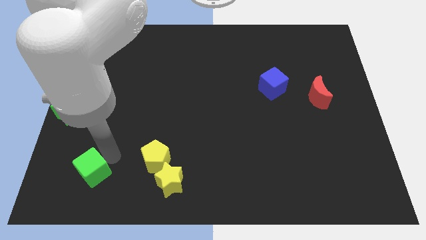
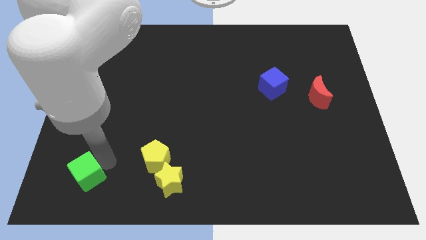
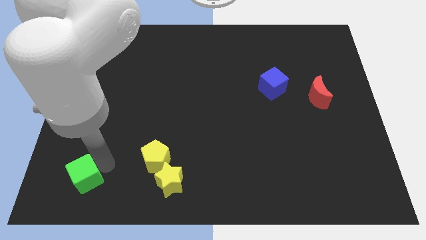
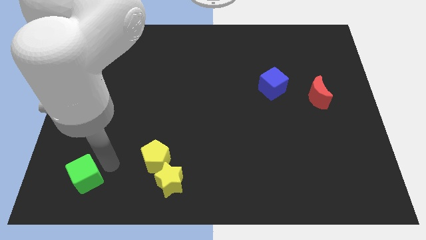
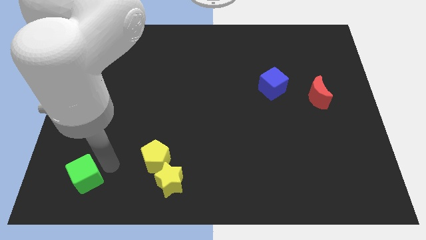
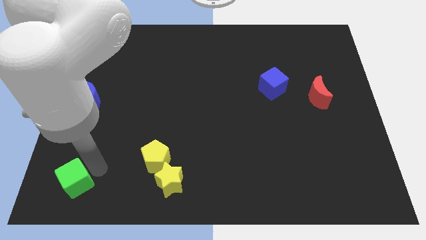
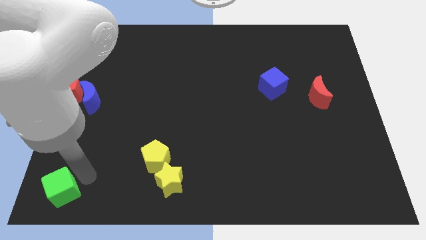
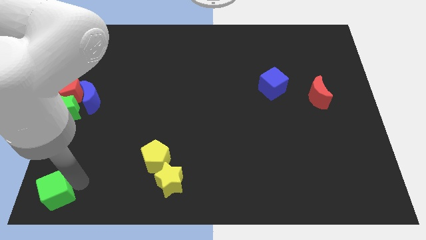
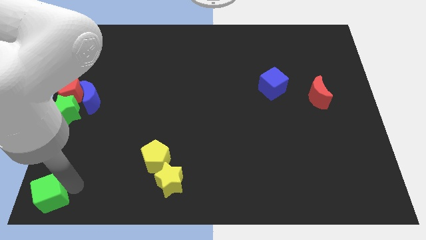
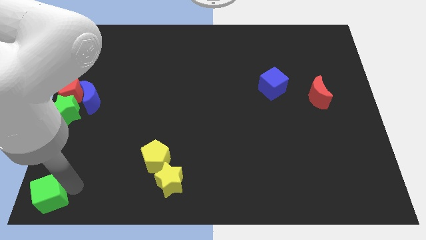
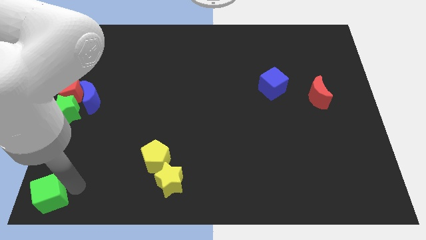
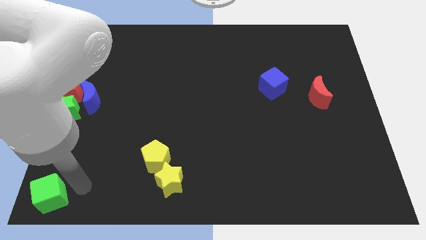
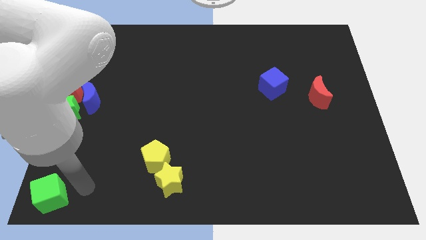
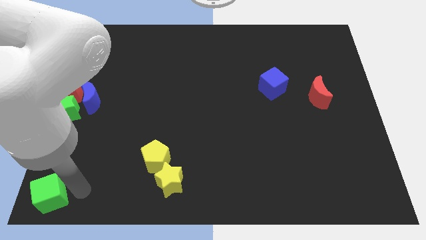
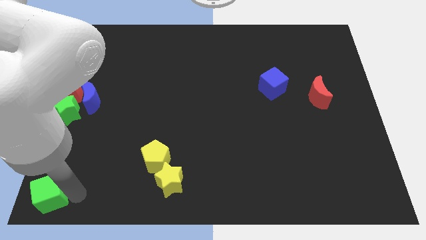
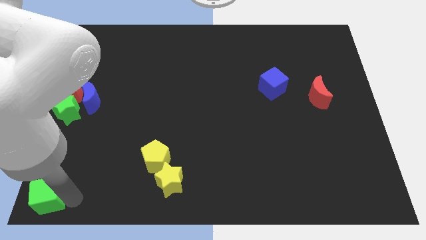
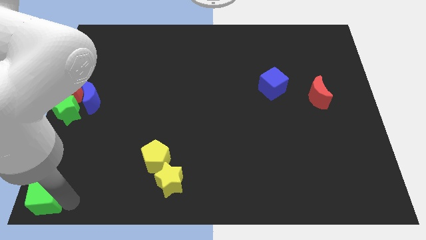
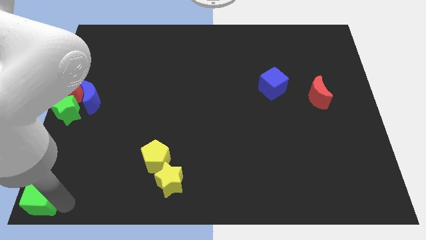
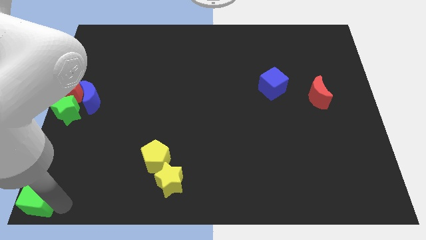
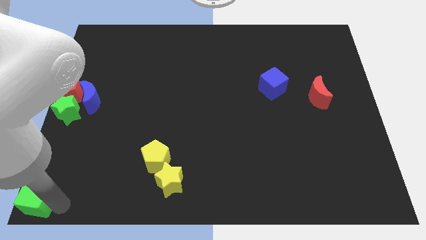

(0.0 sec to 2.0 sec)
place the green cube to the bottom left of the board

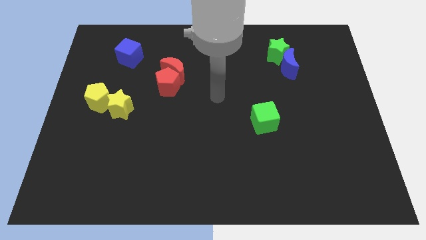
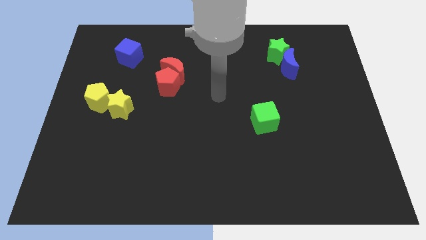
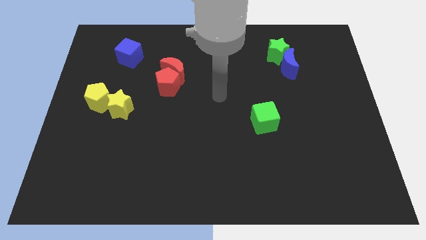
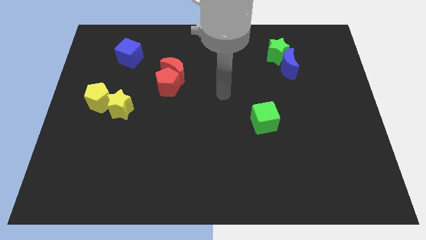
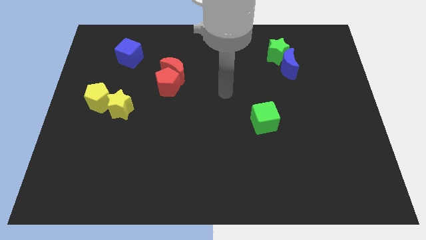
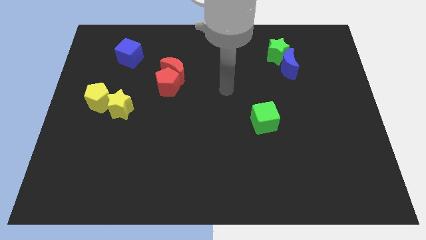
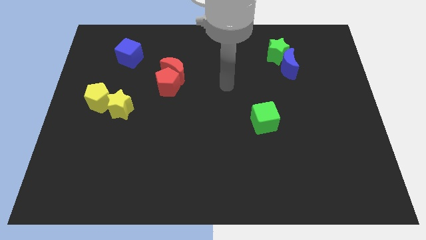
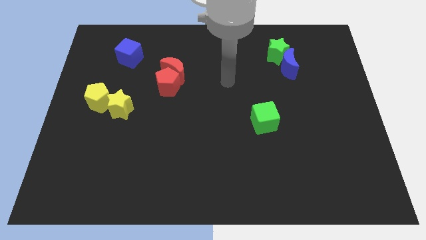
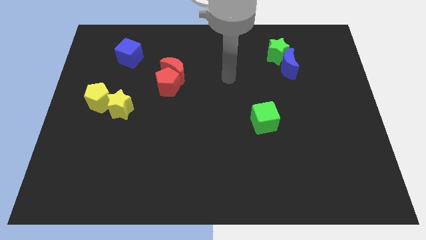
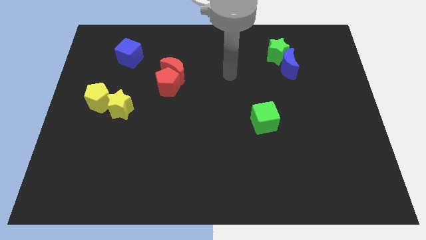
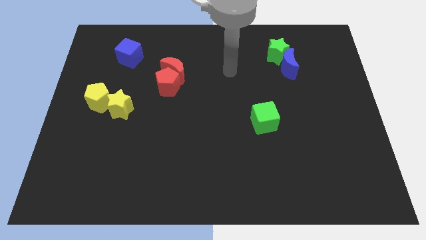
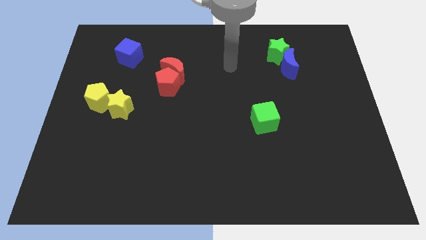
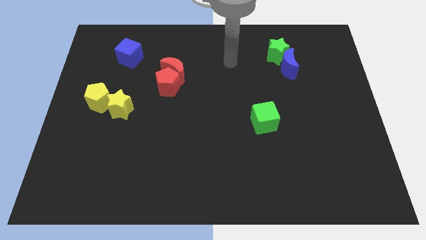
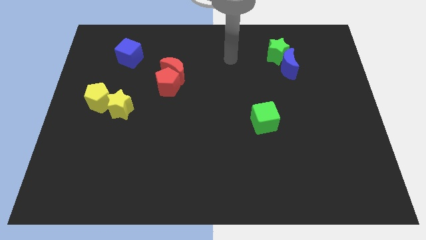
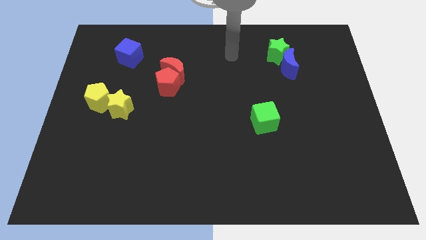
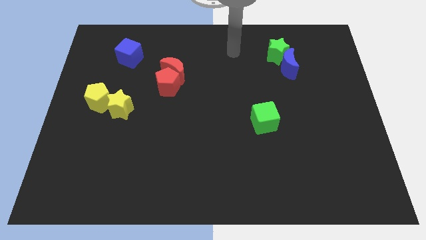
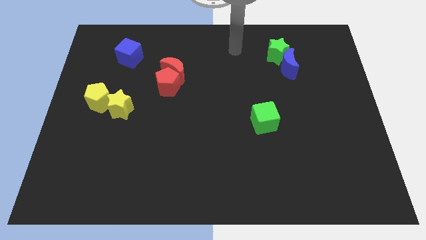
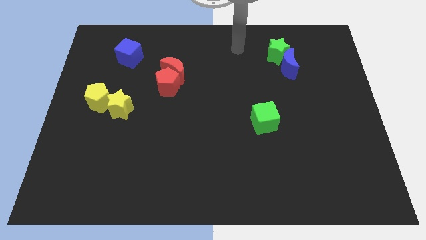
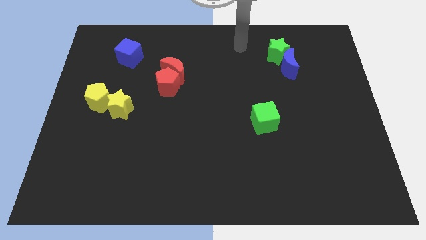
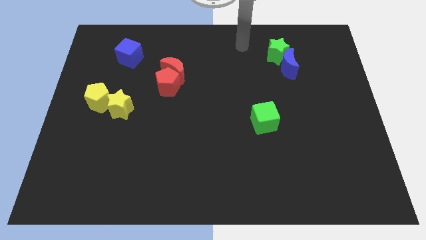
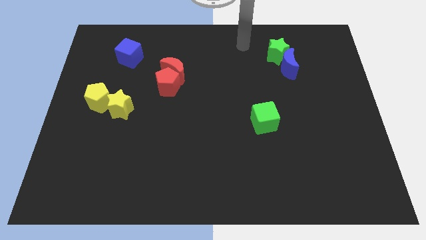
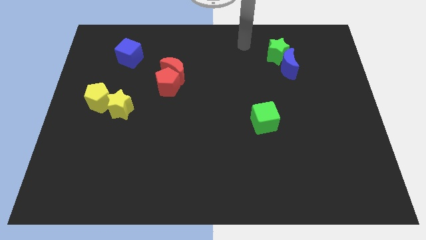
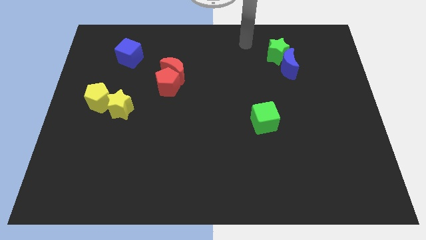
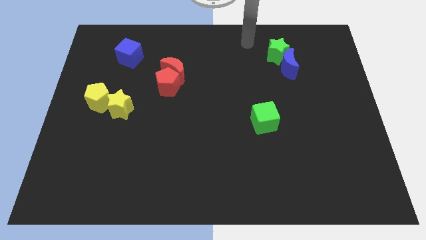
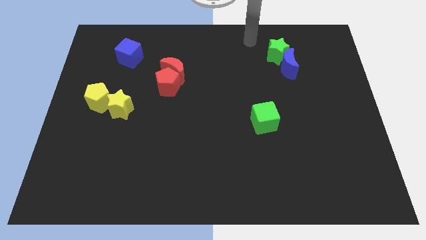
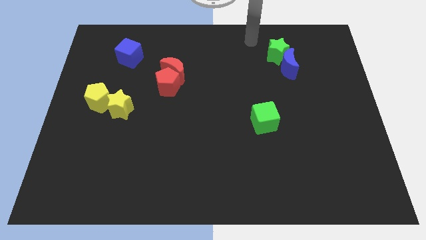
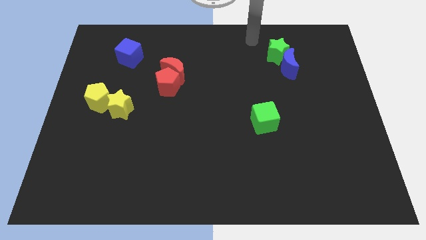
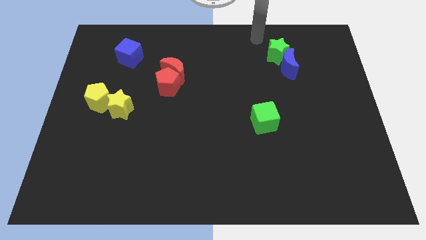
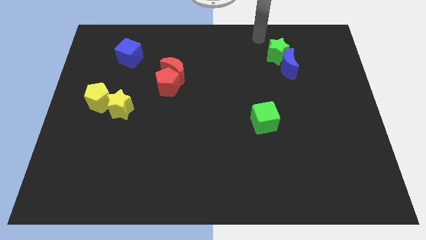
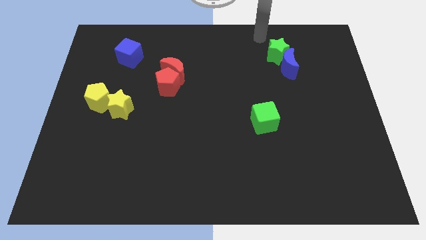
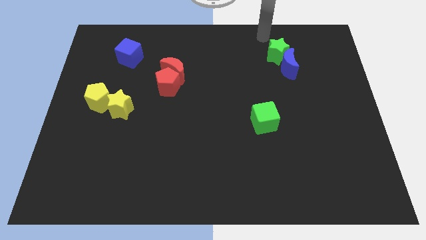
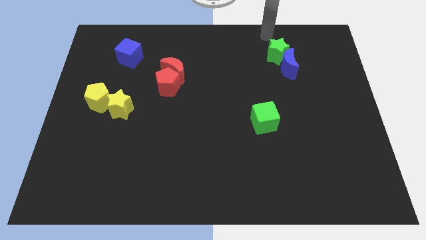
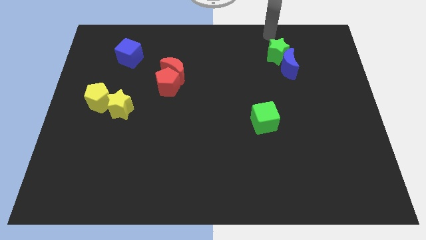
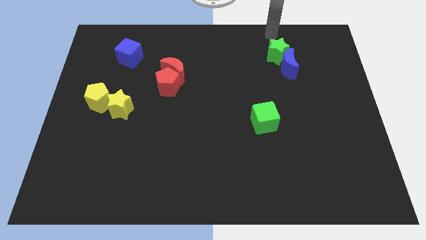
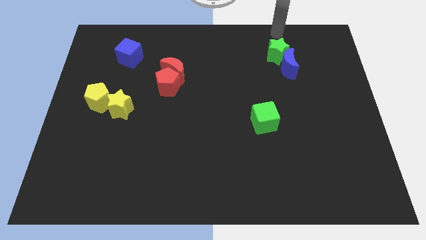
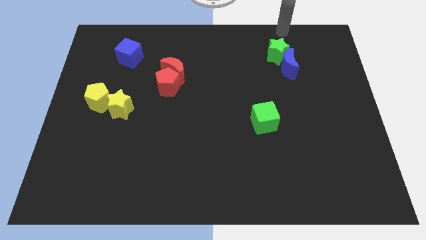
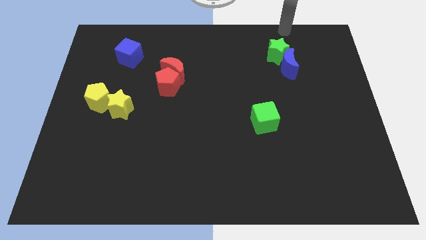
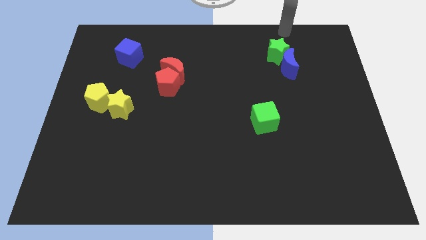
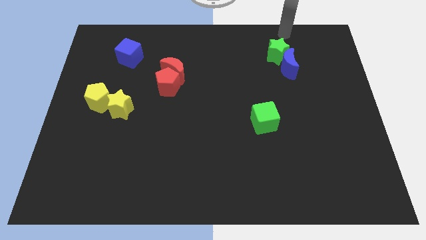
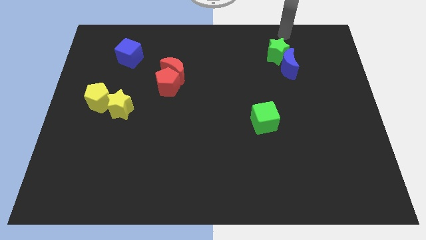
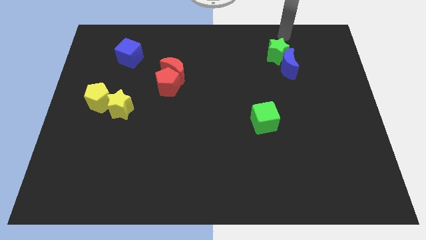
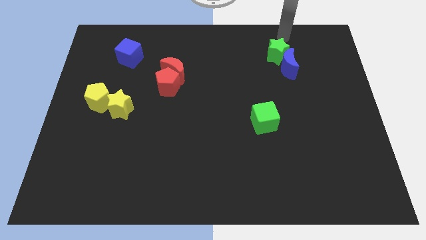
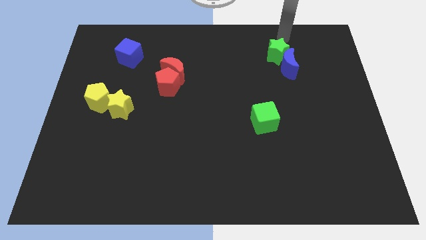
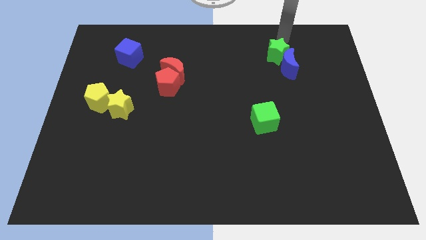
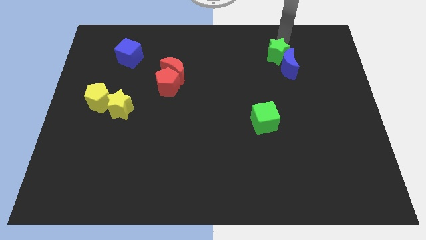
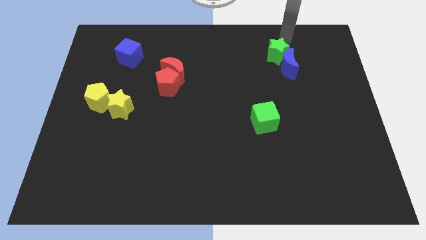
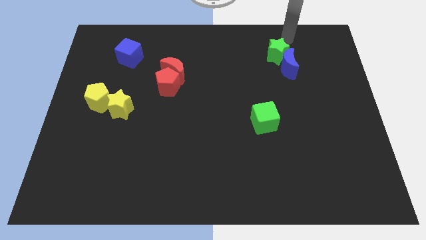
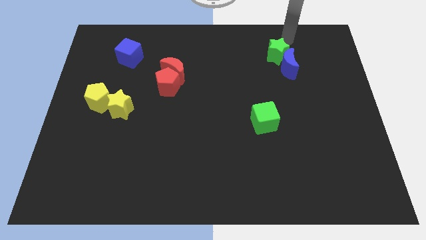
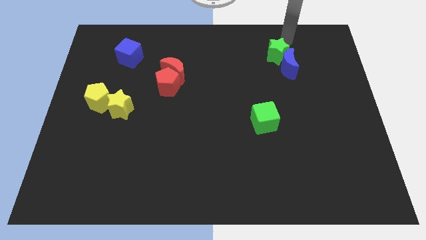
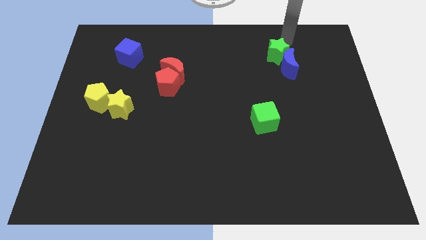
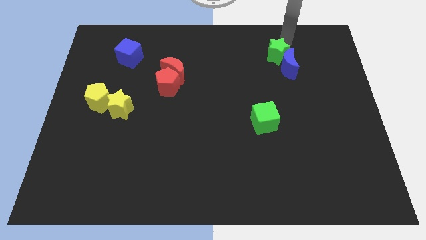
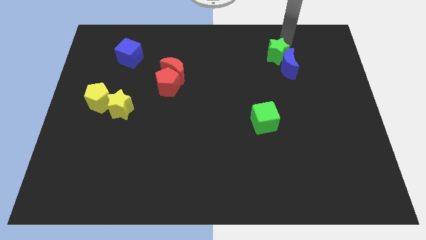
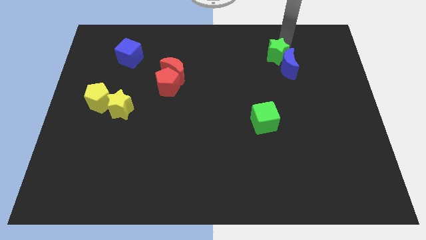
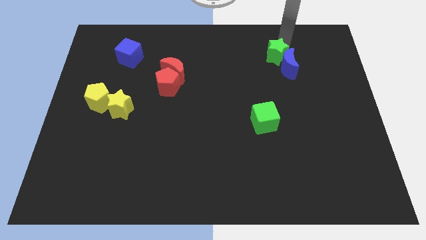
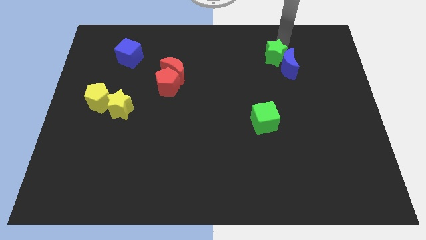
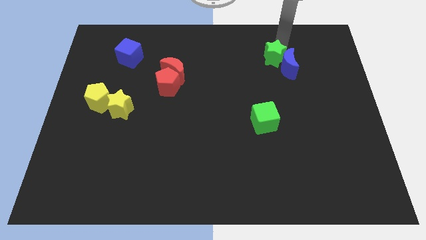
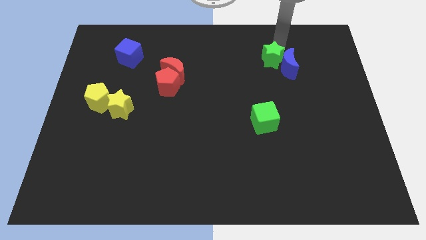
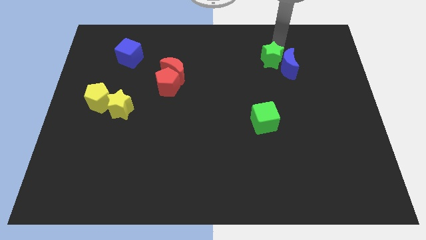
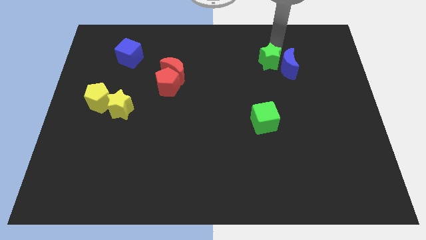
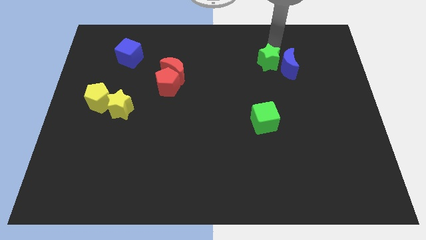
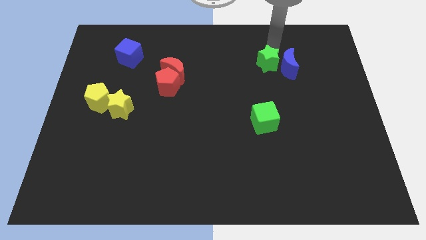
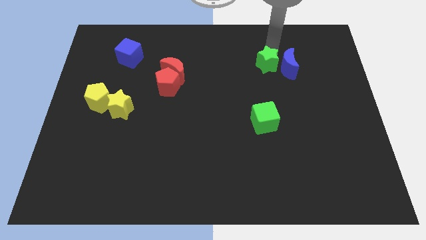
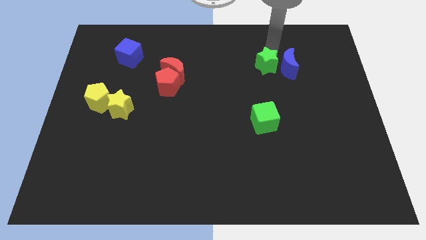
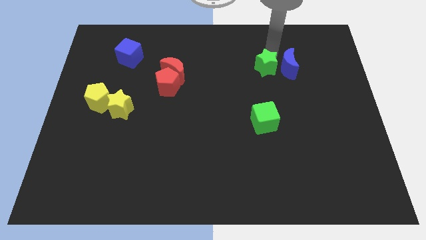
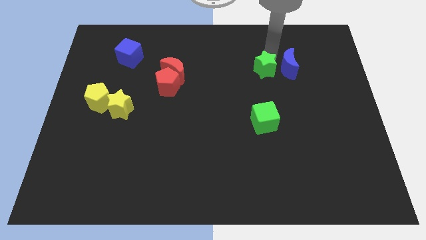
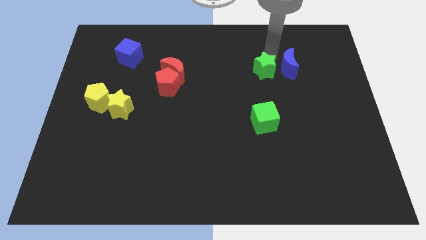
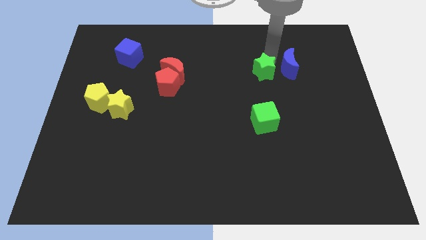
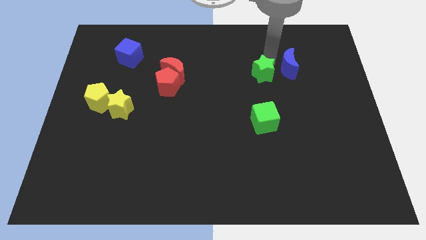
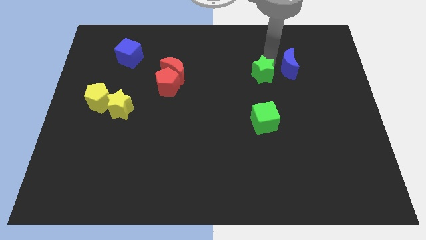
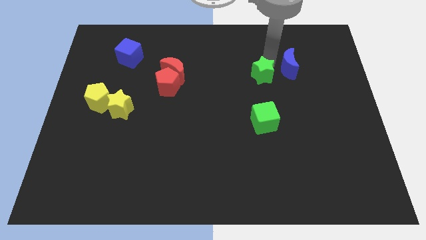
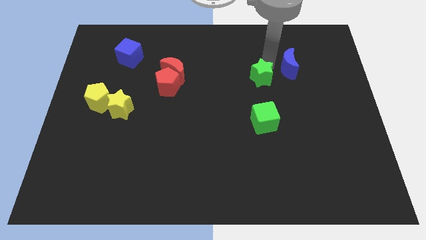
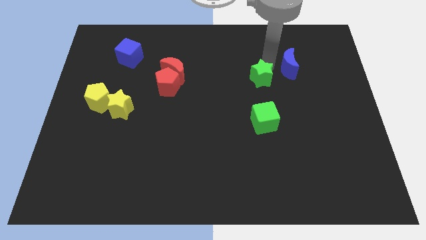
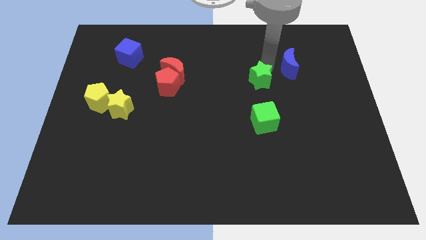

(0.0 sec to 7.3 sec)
separate the green star from the blue crescent
